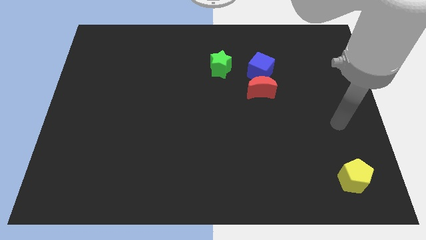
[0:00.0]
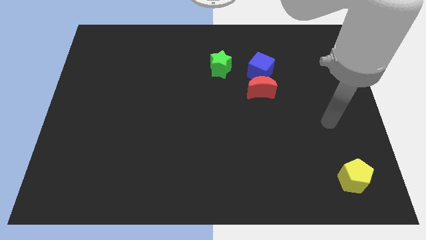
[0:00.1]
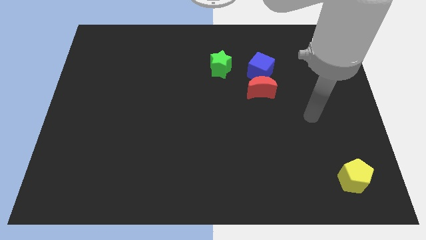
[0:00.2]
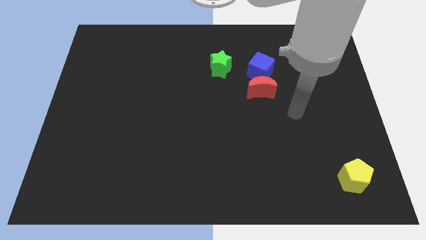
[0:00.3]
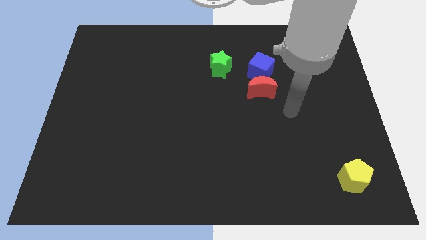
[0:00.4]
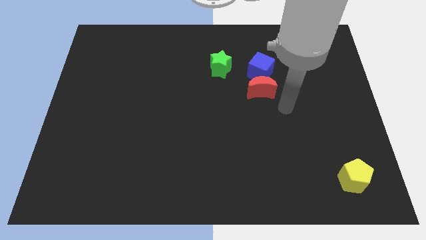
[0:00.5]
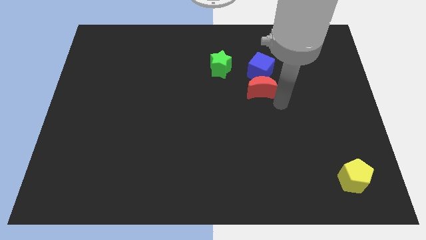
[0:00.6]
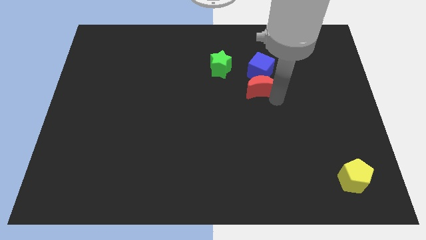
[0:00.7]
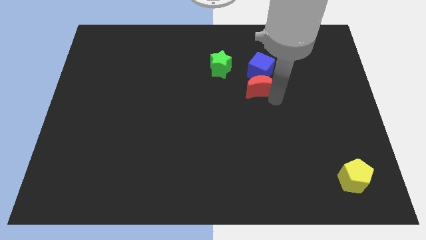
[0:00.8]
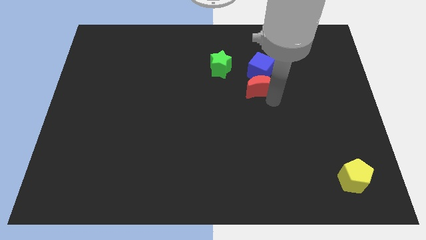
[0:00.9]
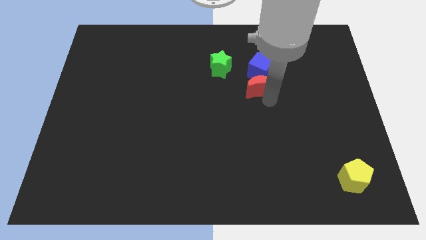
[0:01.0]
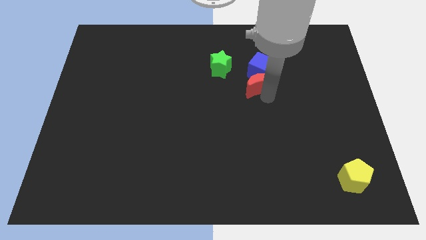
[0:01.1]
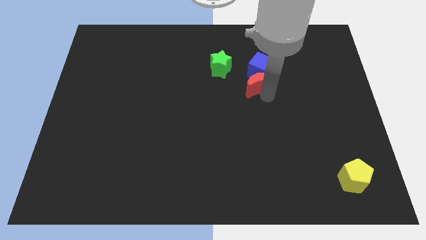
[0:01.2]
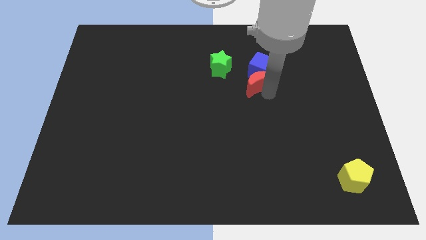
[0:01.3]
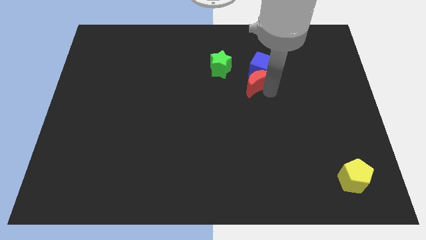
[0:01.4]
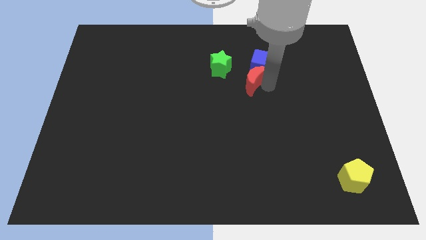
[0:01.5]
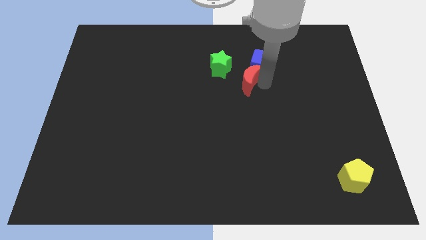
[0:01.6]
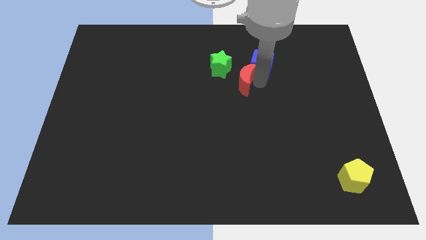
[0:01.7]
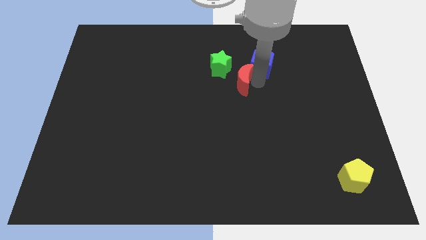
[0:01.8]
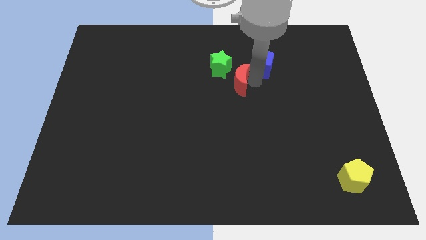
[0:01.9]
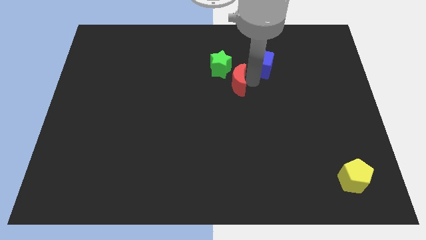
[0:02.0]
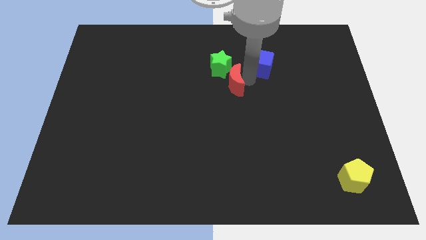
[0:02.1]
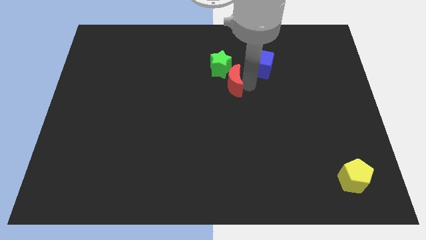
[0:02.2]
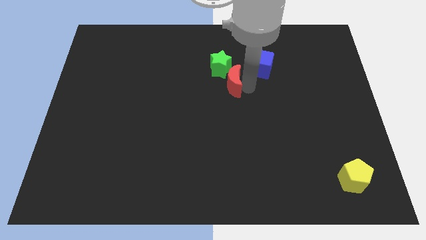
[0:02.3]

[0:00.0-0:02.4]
slide the red block close to the star

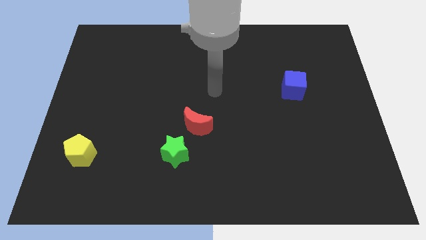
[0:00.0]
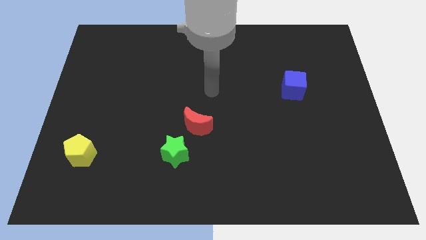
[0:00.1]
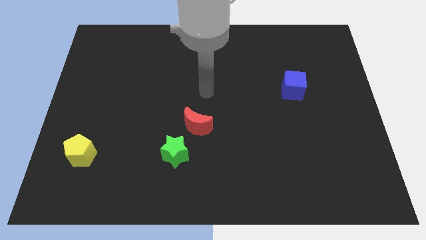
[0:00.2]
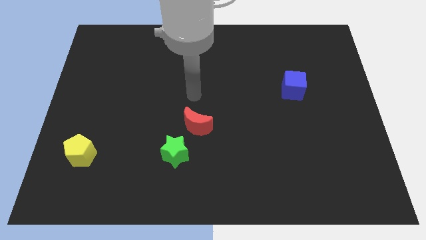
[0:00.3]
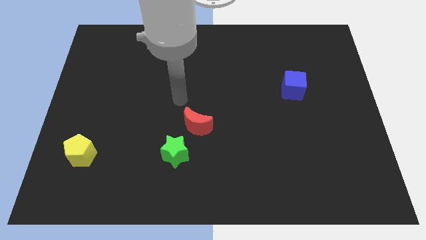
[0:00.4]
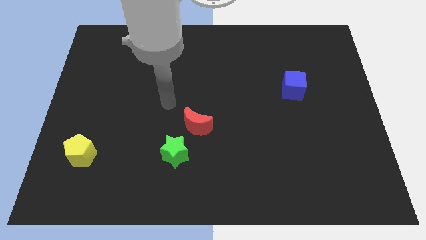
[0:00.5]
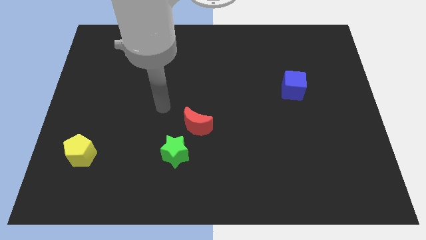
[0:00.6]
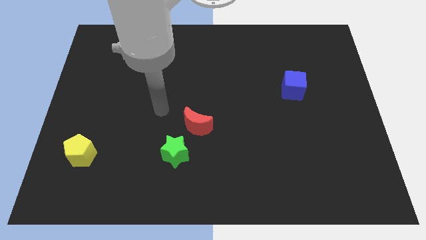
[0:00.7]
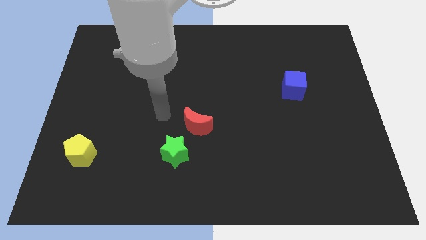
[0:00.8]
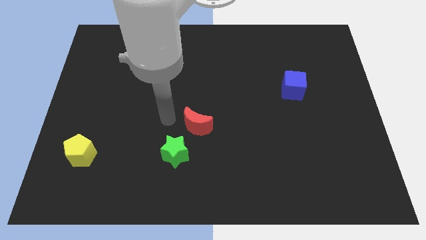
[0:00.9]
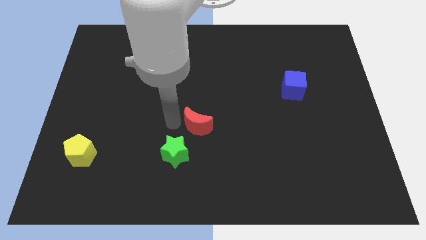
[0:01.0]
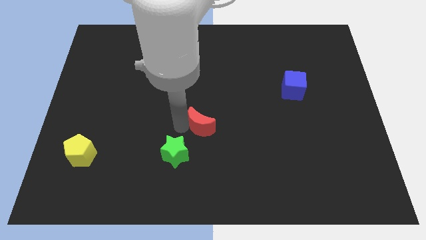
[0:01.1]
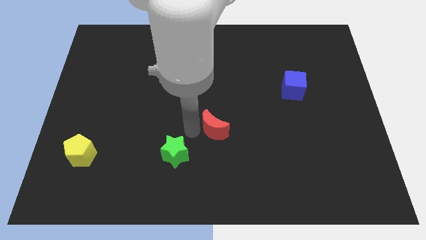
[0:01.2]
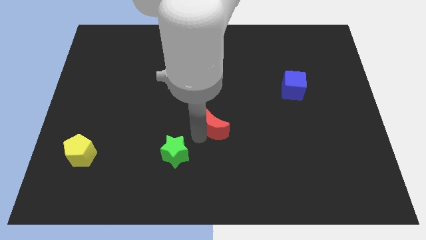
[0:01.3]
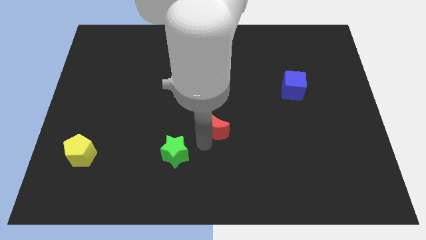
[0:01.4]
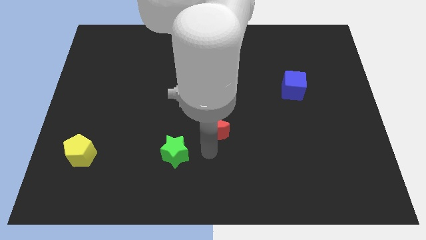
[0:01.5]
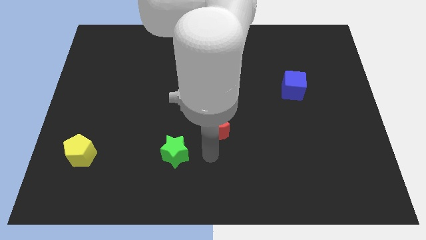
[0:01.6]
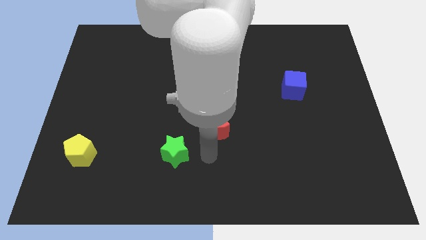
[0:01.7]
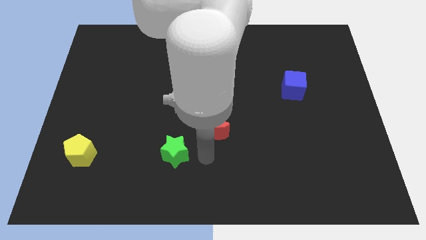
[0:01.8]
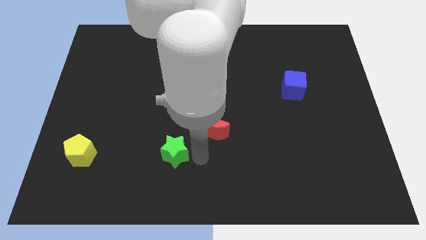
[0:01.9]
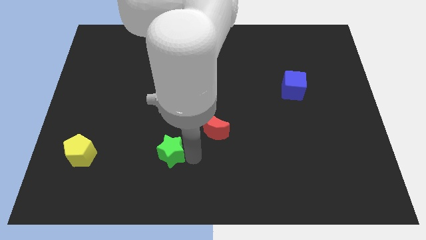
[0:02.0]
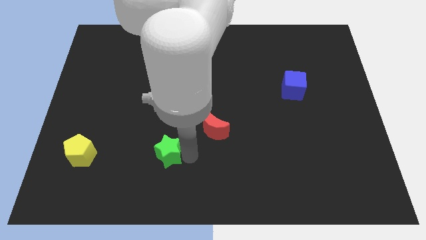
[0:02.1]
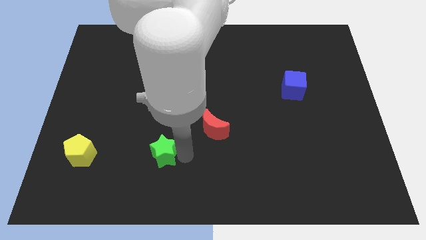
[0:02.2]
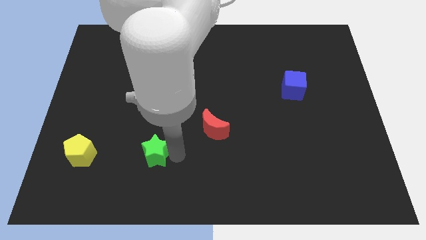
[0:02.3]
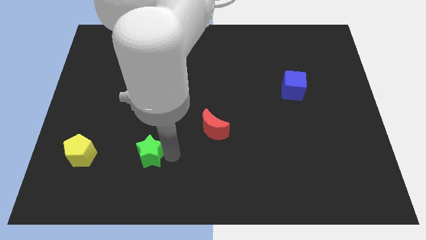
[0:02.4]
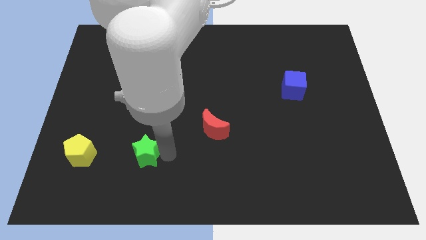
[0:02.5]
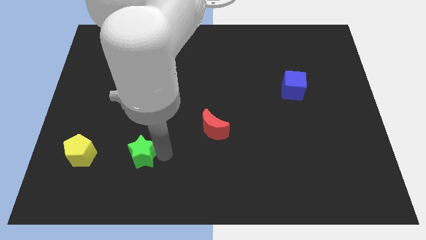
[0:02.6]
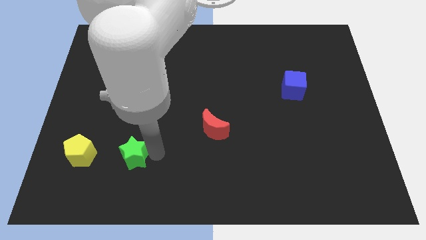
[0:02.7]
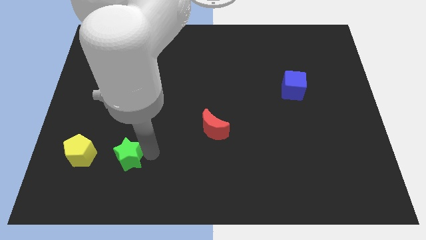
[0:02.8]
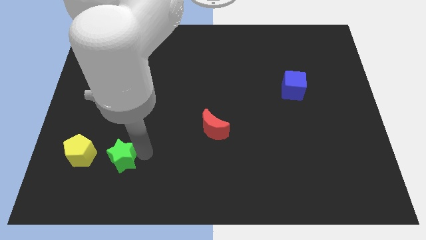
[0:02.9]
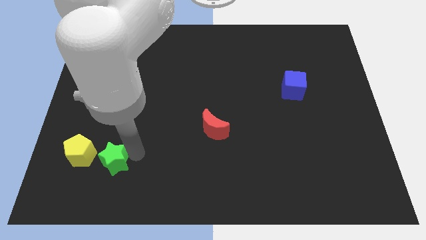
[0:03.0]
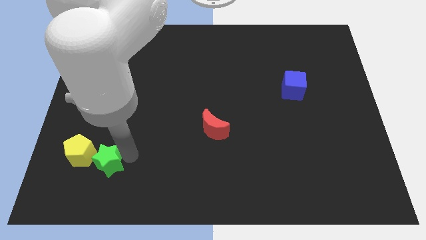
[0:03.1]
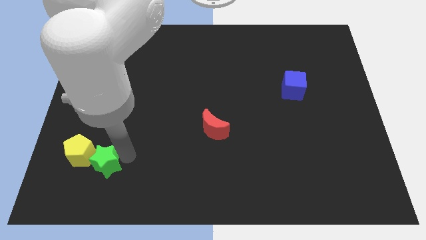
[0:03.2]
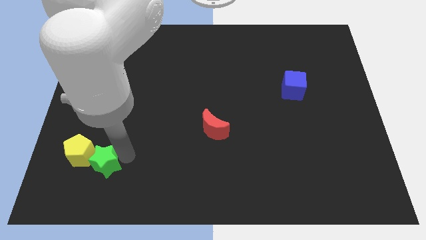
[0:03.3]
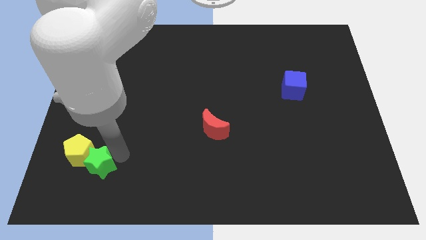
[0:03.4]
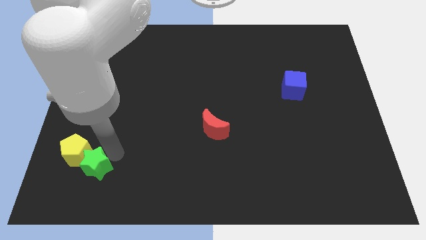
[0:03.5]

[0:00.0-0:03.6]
slide the green block next to the pentagon

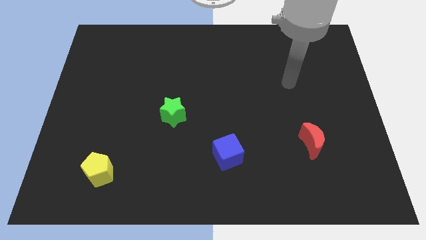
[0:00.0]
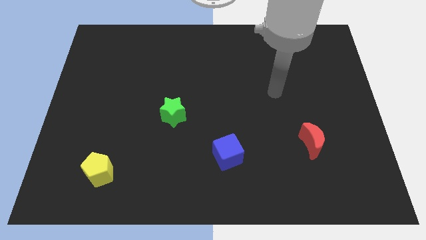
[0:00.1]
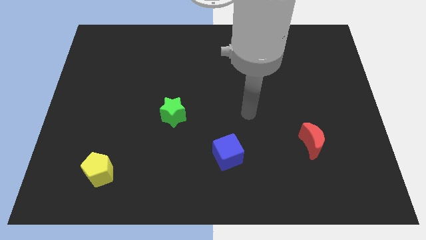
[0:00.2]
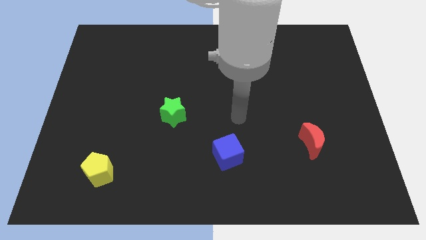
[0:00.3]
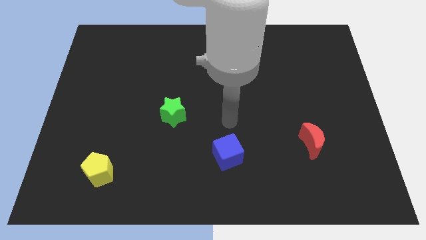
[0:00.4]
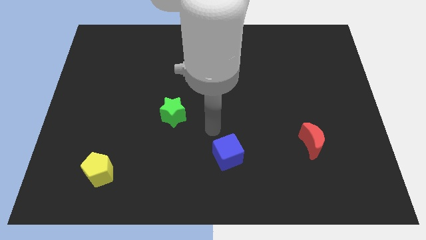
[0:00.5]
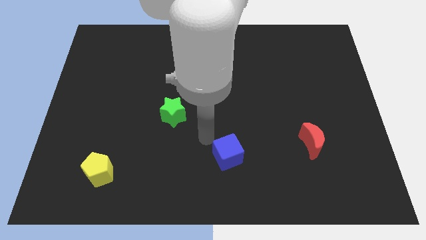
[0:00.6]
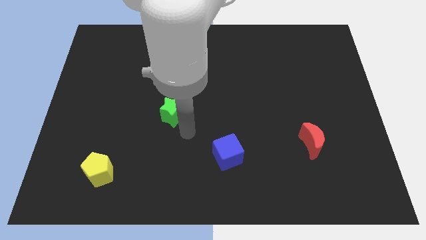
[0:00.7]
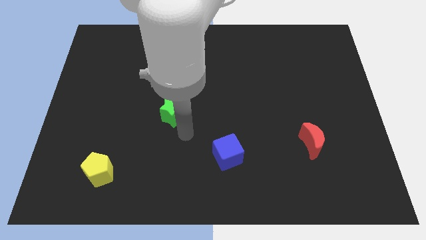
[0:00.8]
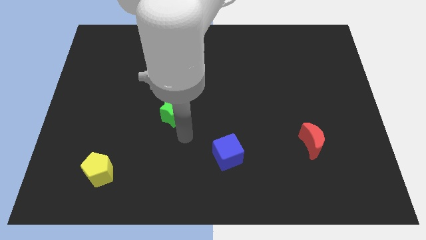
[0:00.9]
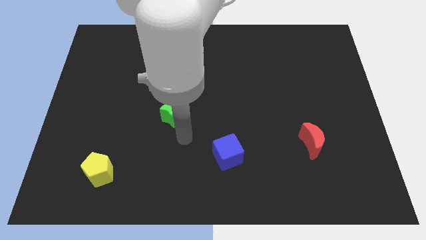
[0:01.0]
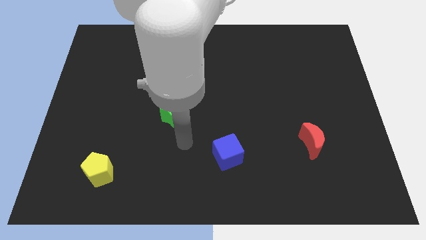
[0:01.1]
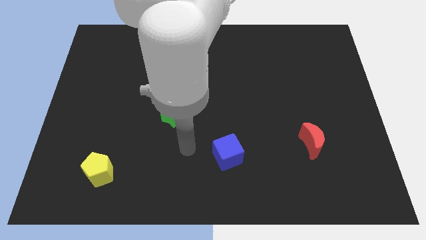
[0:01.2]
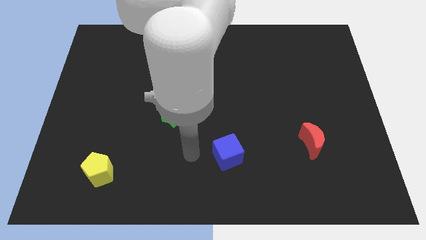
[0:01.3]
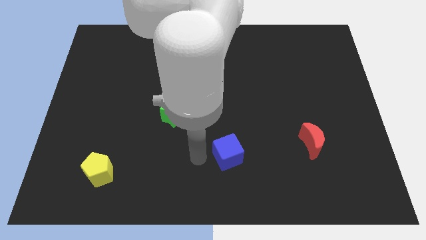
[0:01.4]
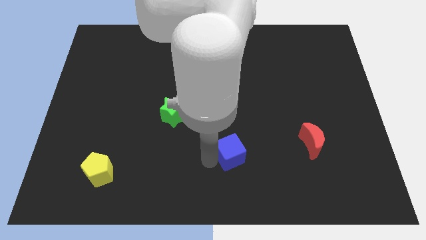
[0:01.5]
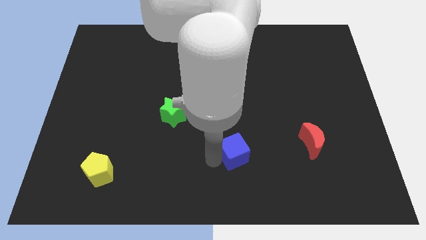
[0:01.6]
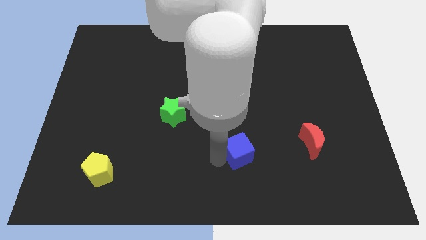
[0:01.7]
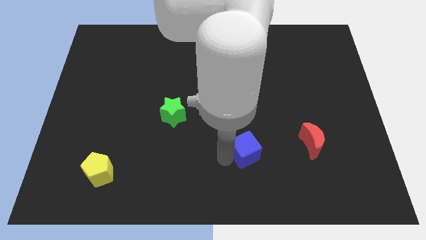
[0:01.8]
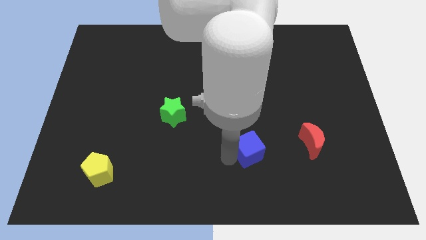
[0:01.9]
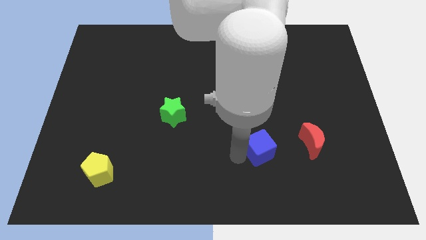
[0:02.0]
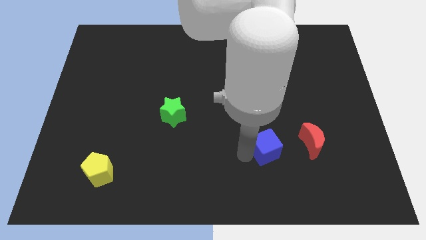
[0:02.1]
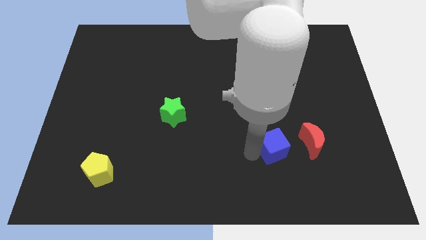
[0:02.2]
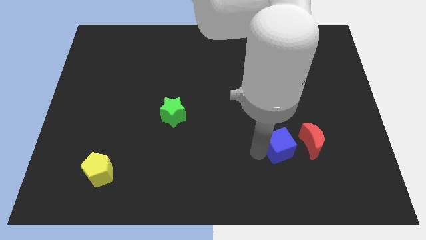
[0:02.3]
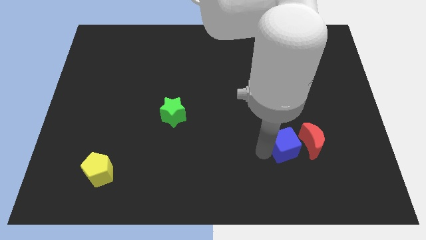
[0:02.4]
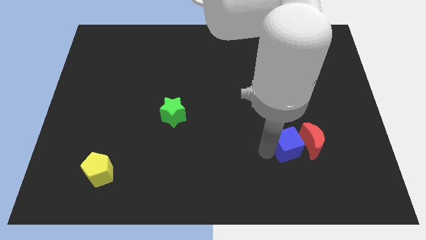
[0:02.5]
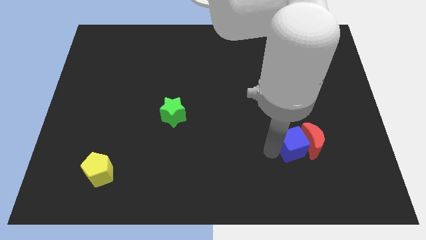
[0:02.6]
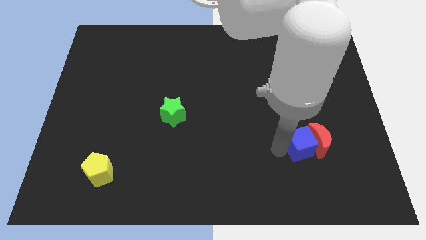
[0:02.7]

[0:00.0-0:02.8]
slide the cube towards the moon

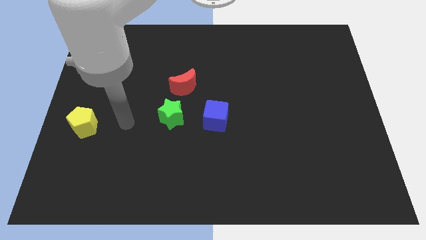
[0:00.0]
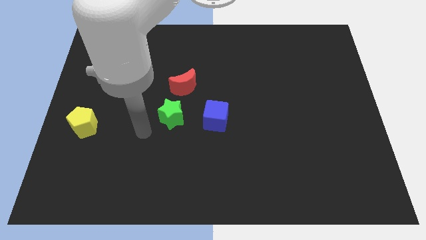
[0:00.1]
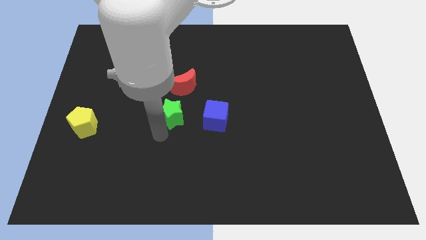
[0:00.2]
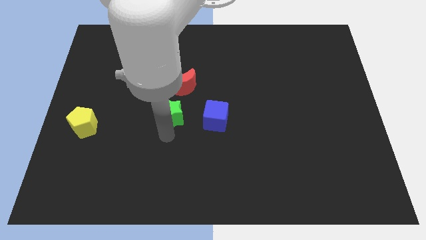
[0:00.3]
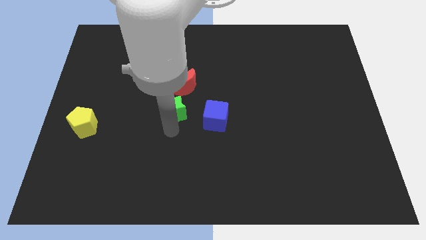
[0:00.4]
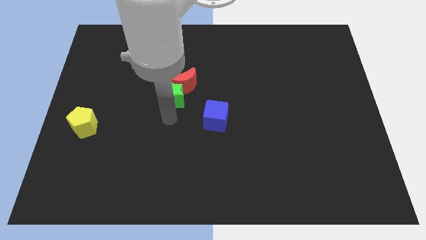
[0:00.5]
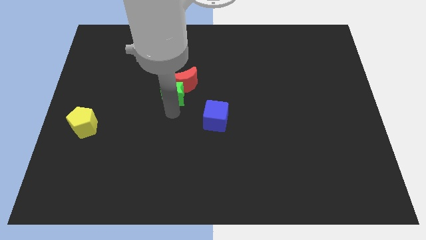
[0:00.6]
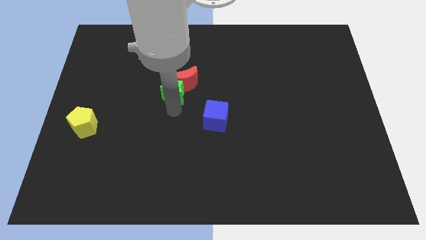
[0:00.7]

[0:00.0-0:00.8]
move the green star close to the moon
